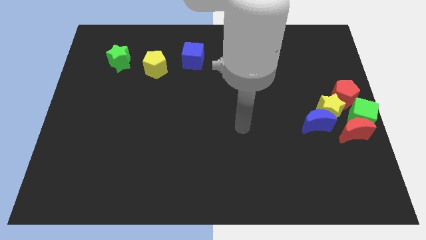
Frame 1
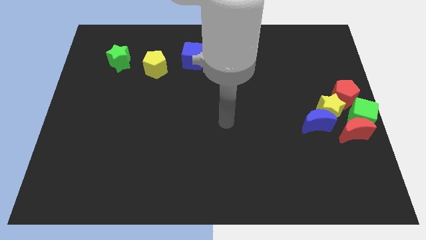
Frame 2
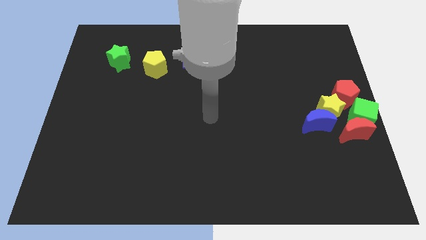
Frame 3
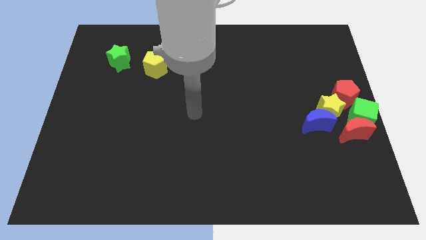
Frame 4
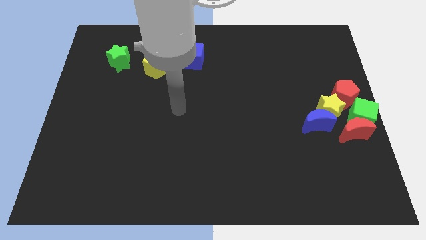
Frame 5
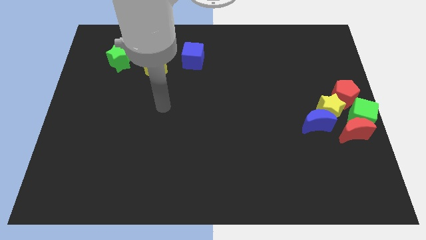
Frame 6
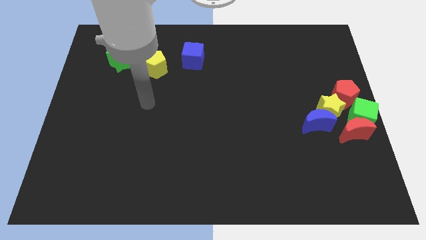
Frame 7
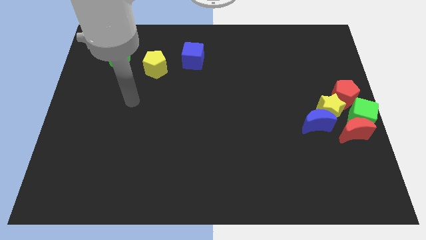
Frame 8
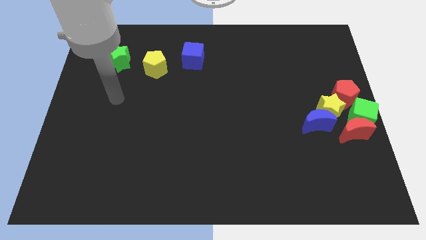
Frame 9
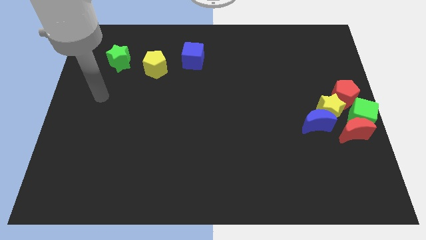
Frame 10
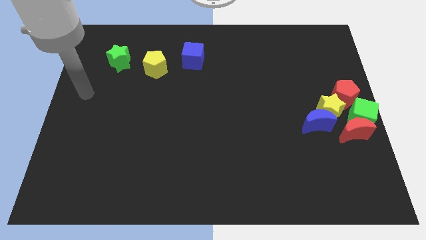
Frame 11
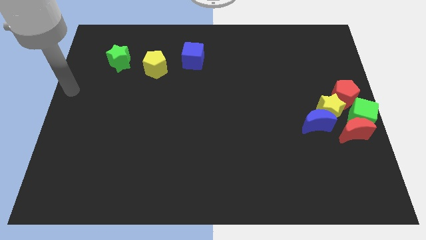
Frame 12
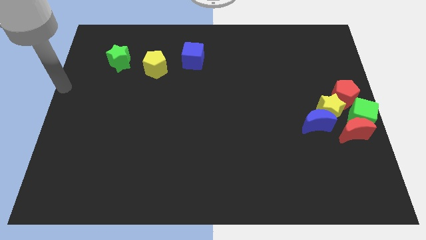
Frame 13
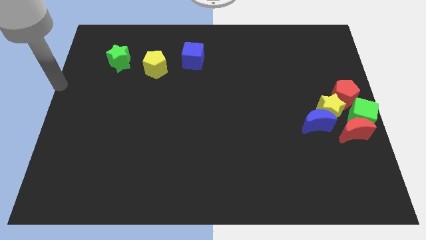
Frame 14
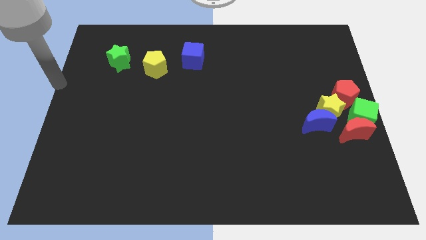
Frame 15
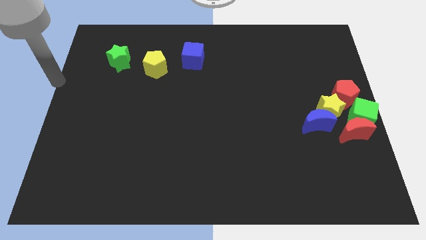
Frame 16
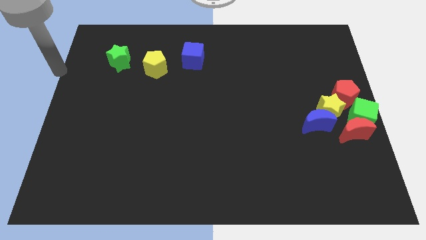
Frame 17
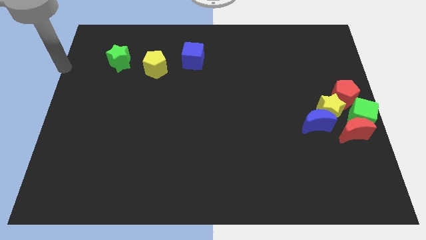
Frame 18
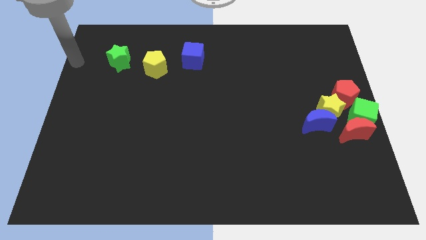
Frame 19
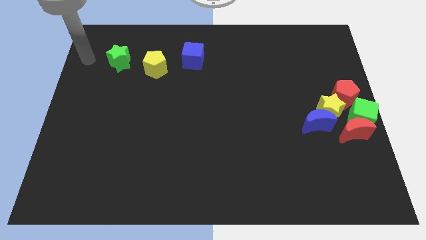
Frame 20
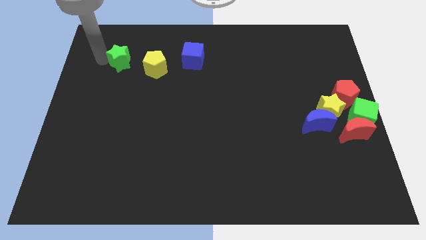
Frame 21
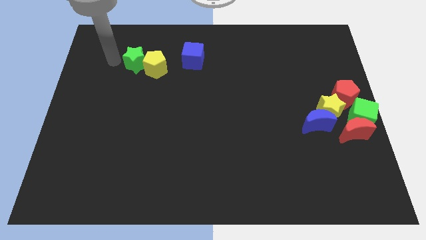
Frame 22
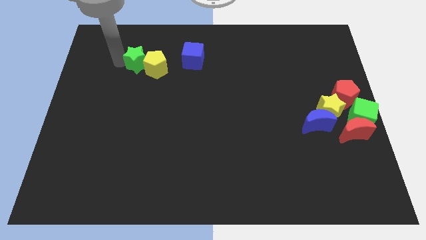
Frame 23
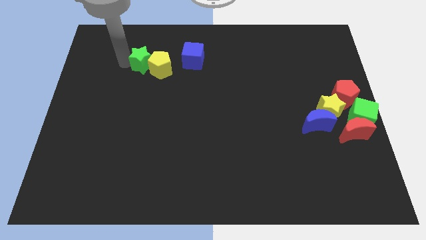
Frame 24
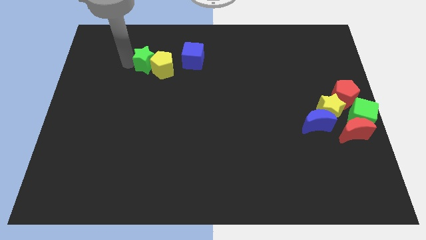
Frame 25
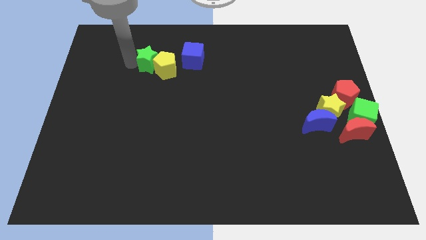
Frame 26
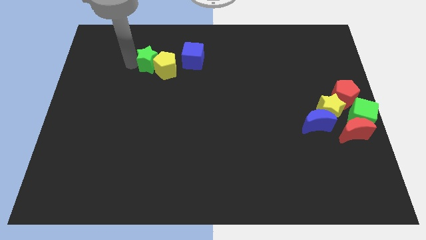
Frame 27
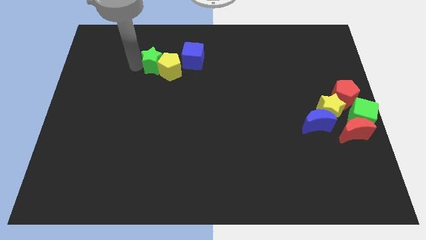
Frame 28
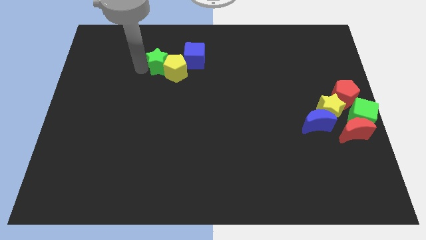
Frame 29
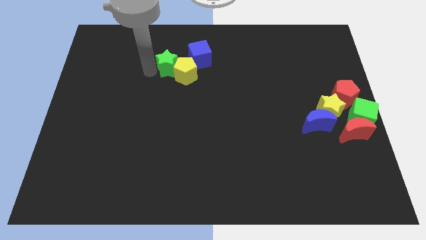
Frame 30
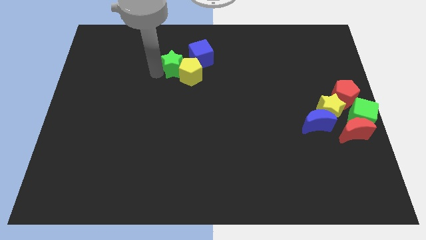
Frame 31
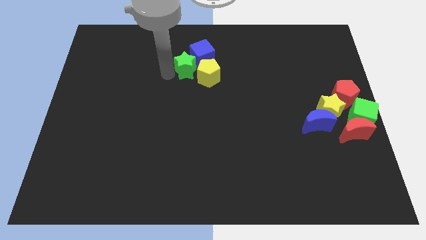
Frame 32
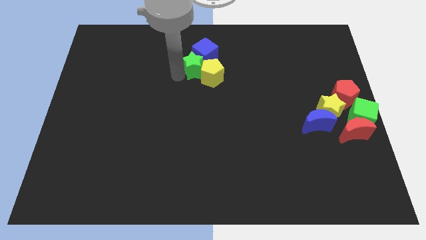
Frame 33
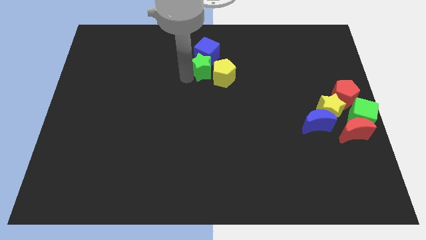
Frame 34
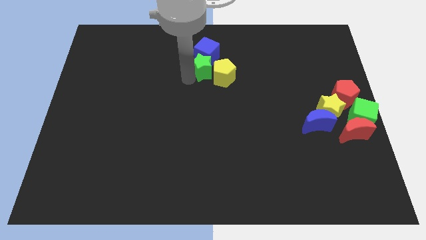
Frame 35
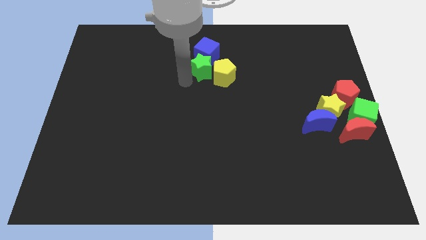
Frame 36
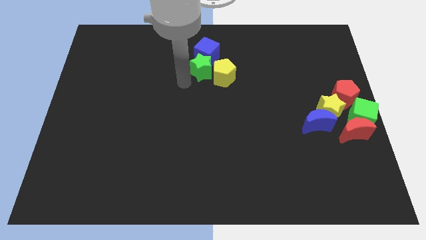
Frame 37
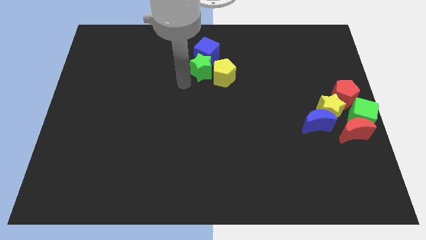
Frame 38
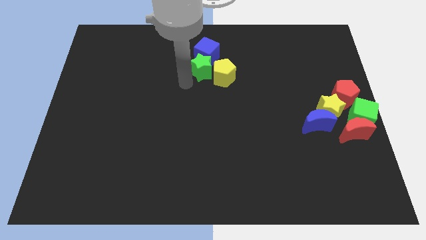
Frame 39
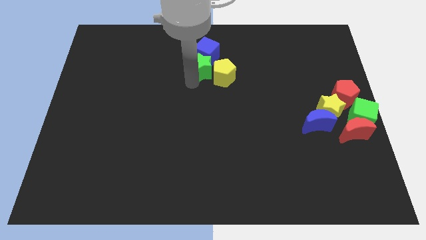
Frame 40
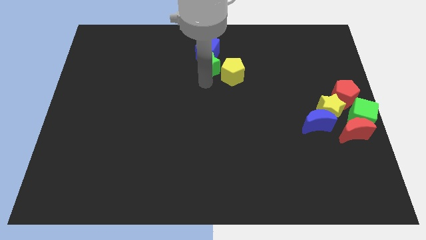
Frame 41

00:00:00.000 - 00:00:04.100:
push the yellow pentagon using the green star to the top center of the board

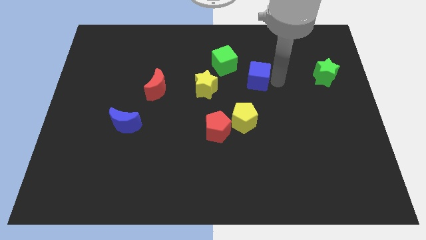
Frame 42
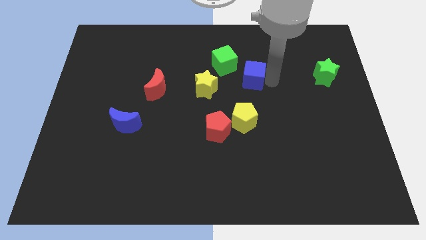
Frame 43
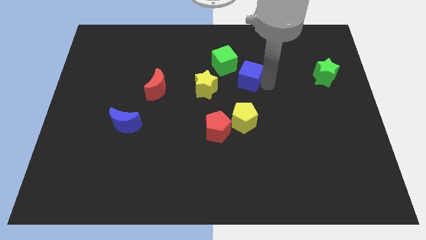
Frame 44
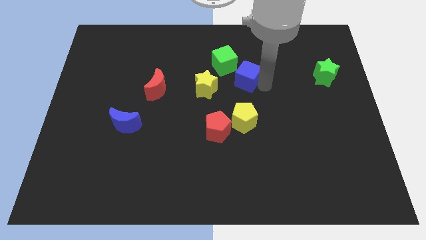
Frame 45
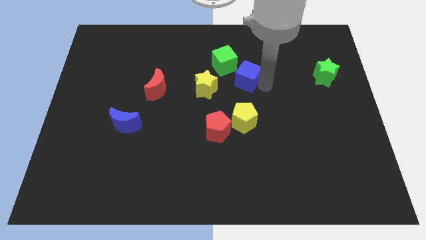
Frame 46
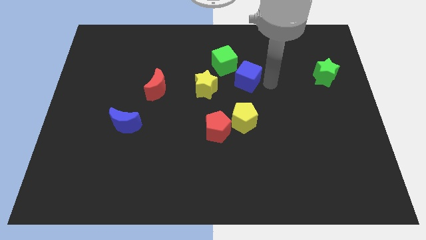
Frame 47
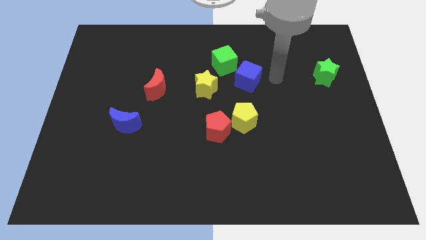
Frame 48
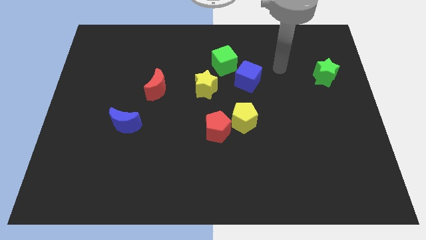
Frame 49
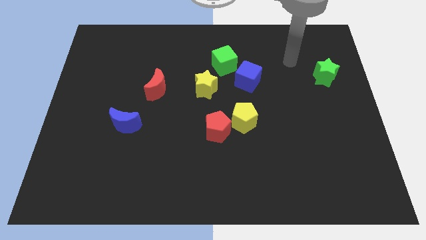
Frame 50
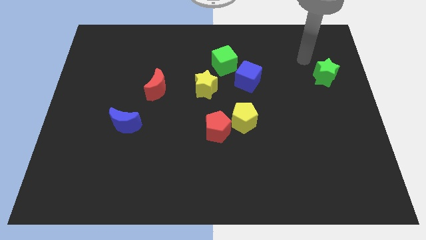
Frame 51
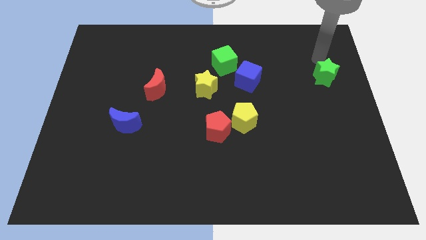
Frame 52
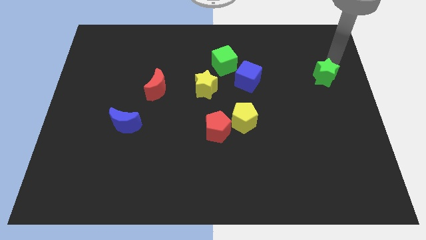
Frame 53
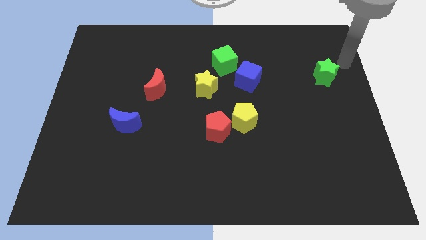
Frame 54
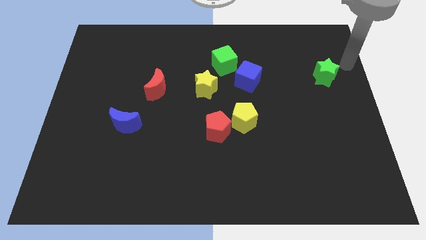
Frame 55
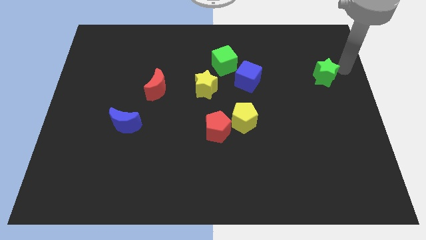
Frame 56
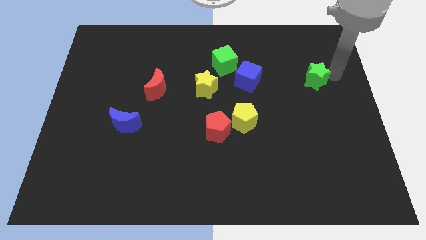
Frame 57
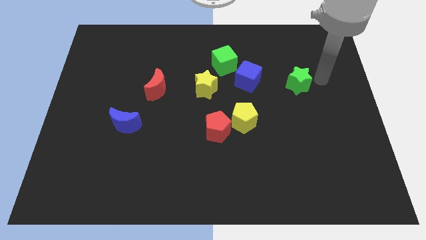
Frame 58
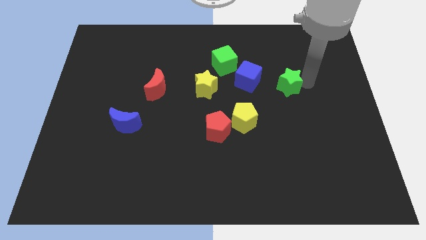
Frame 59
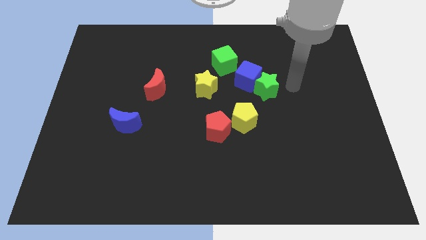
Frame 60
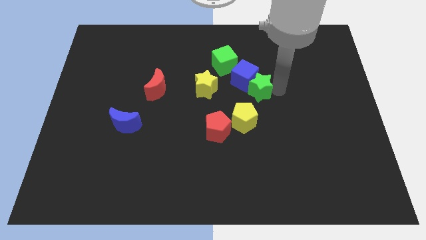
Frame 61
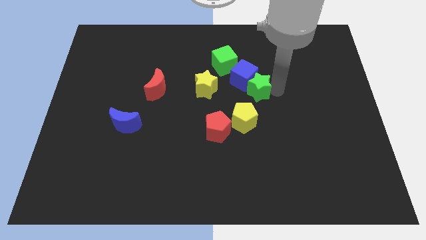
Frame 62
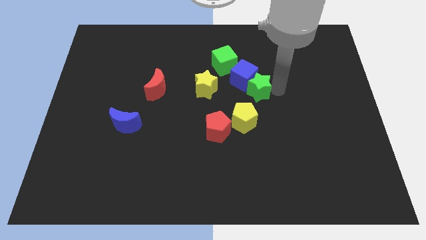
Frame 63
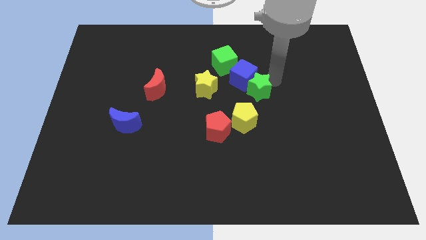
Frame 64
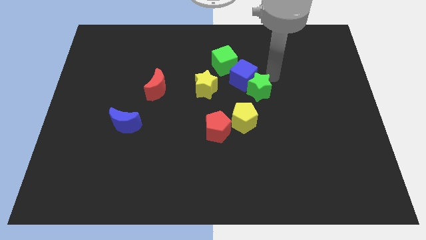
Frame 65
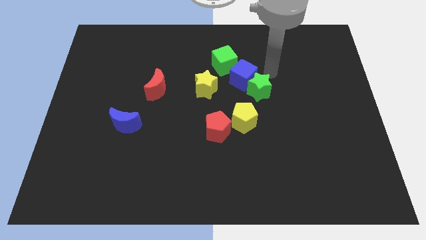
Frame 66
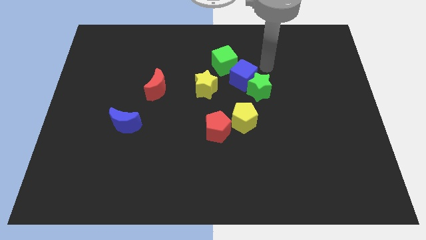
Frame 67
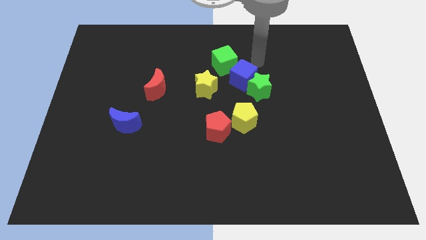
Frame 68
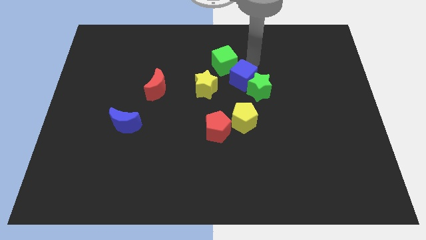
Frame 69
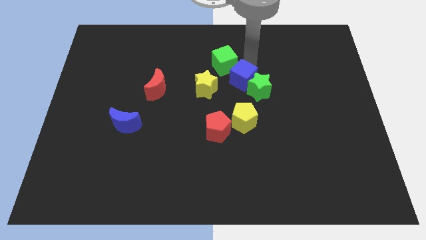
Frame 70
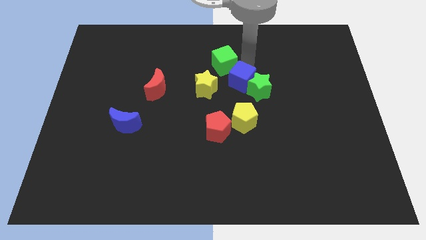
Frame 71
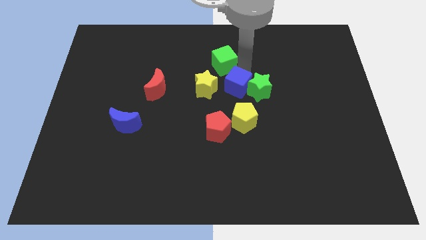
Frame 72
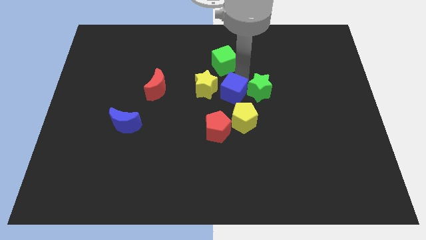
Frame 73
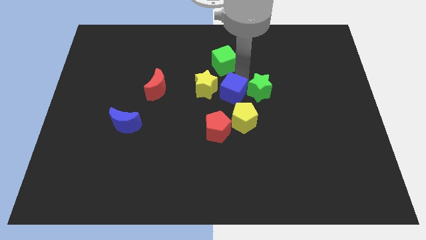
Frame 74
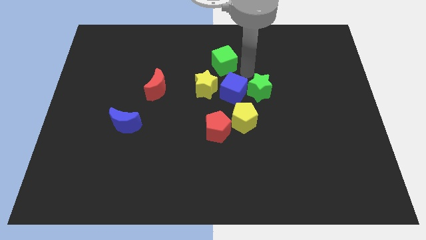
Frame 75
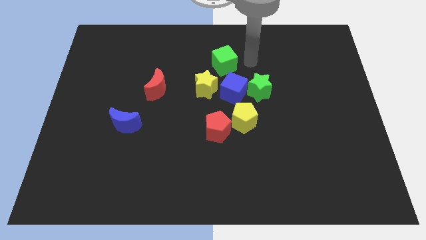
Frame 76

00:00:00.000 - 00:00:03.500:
move the blue cube along with the green star to the right of the yellow star

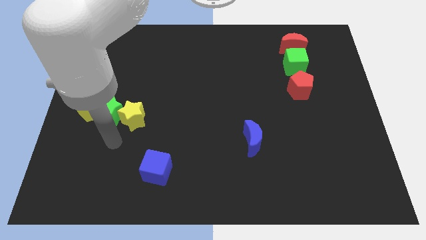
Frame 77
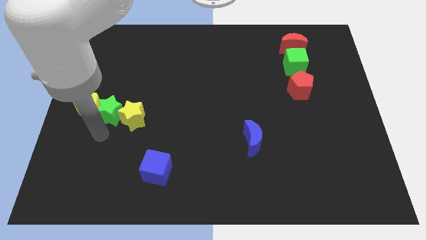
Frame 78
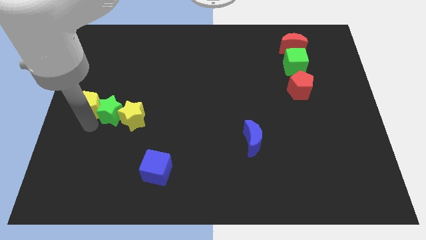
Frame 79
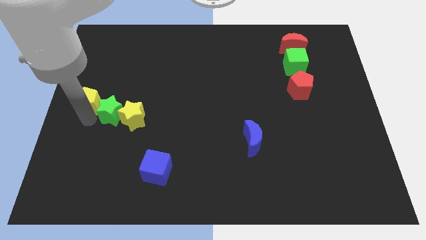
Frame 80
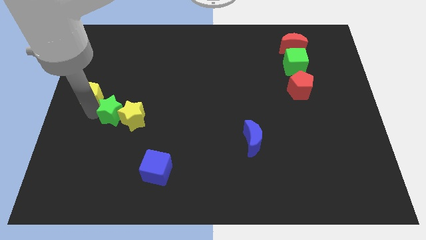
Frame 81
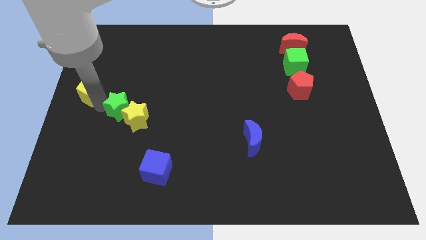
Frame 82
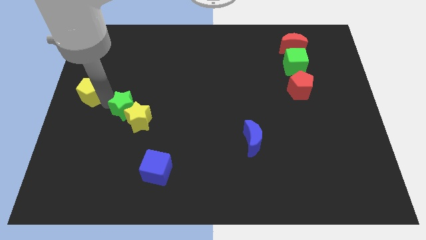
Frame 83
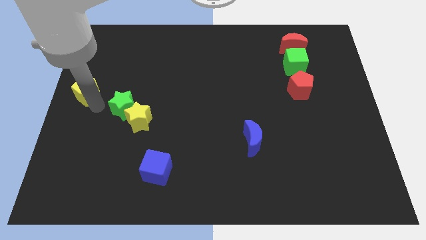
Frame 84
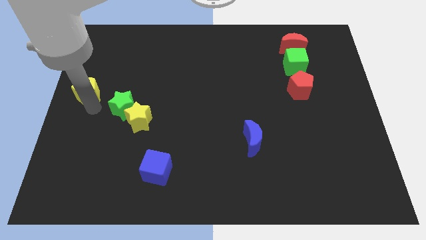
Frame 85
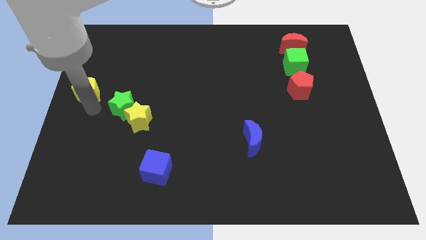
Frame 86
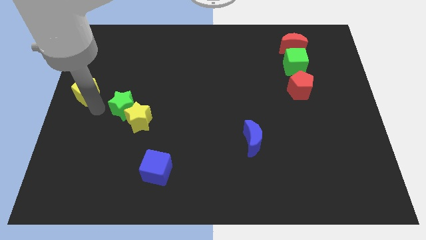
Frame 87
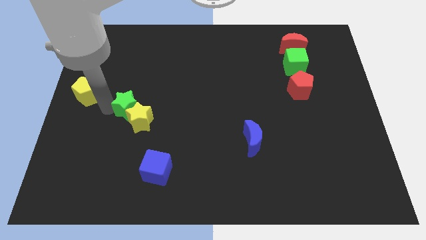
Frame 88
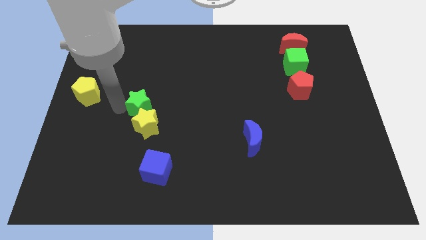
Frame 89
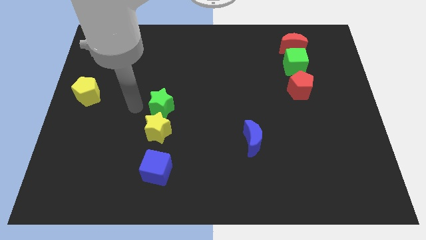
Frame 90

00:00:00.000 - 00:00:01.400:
put the green star to the top side of the yellow star

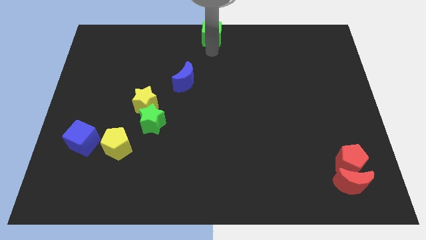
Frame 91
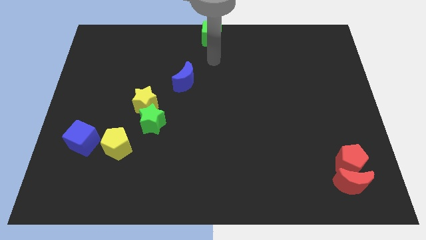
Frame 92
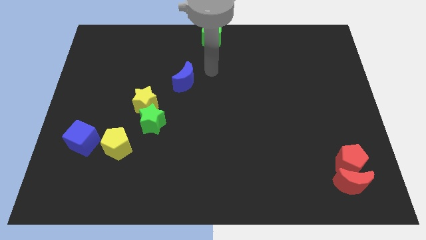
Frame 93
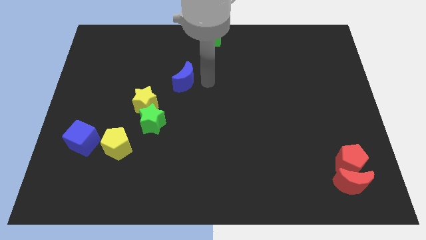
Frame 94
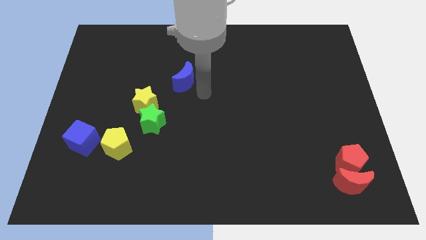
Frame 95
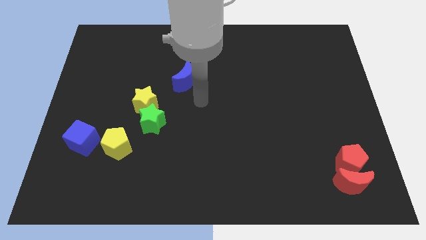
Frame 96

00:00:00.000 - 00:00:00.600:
move the arm away from the green cube
